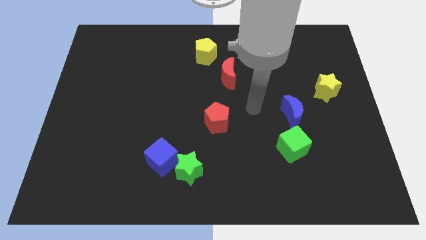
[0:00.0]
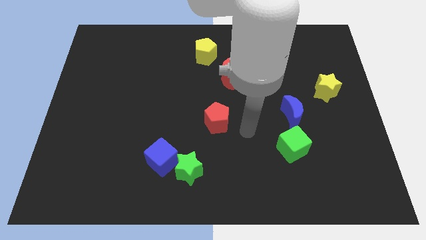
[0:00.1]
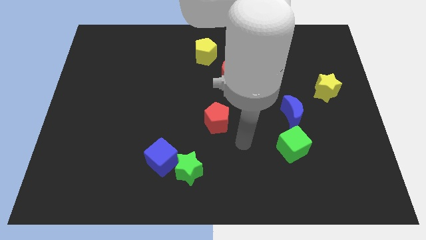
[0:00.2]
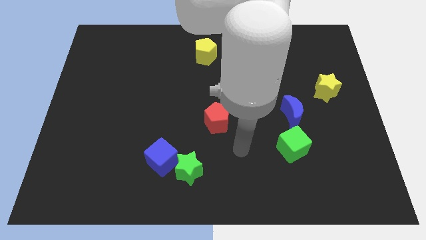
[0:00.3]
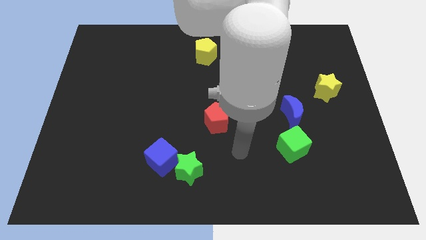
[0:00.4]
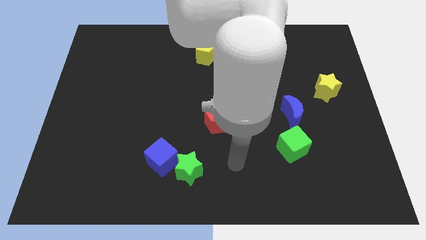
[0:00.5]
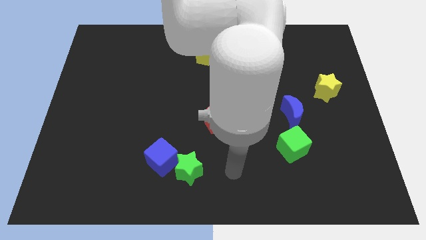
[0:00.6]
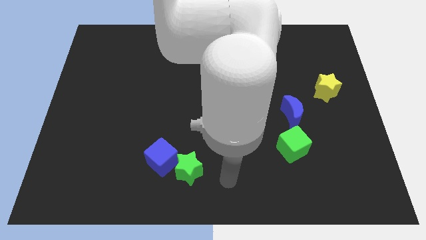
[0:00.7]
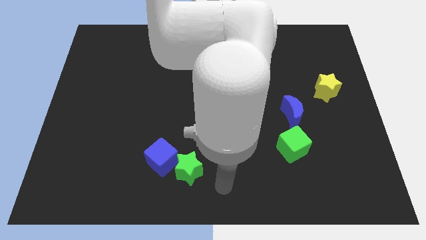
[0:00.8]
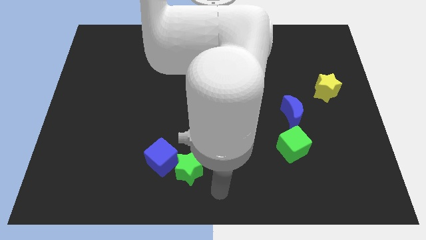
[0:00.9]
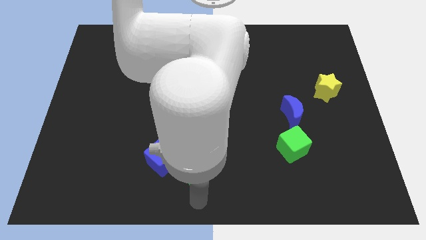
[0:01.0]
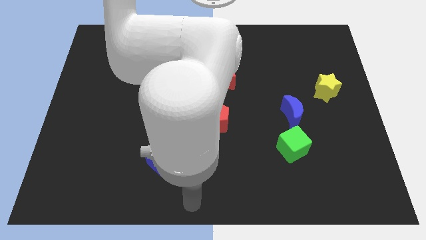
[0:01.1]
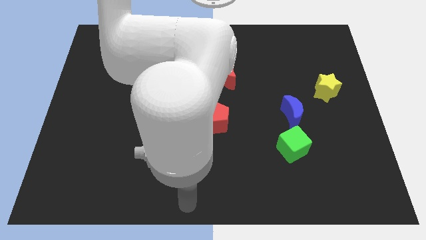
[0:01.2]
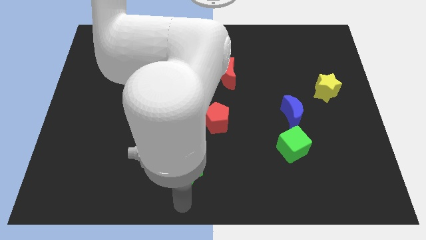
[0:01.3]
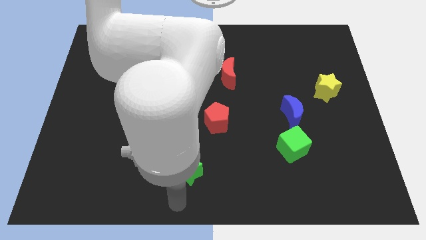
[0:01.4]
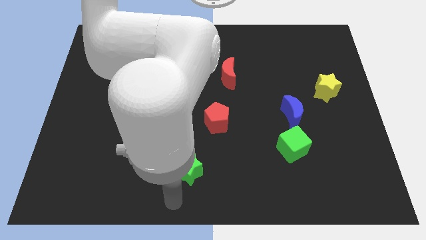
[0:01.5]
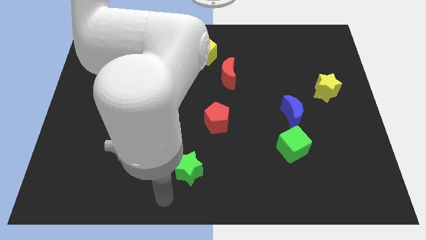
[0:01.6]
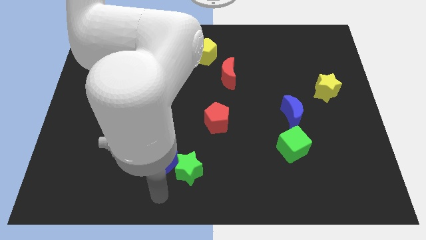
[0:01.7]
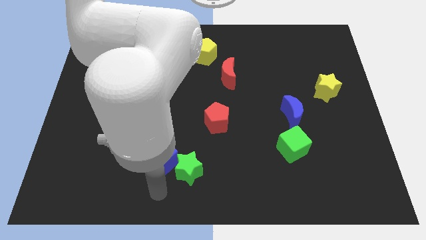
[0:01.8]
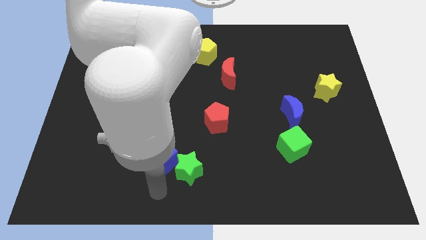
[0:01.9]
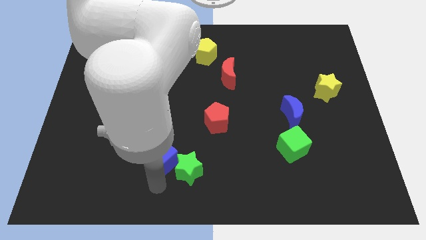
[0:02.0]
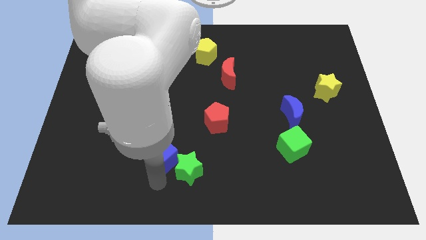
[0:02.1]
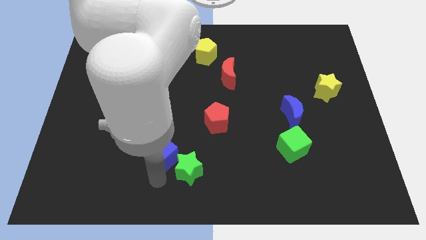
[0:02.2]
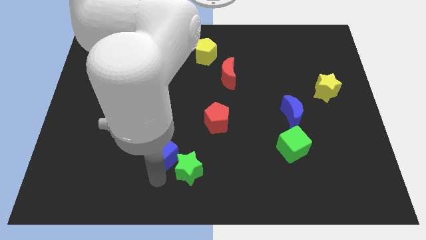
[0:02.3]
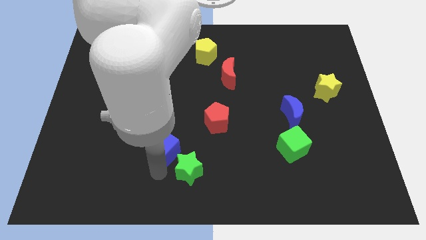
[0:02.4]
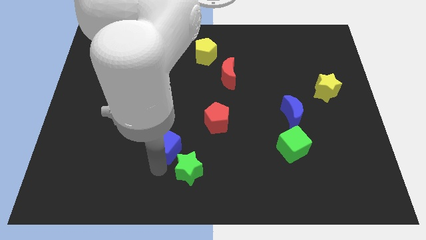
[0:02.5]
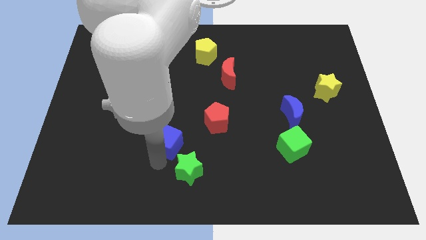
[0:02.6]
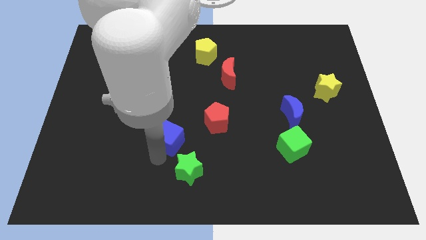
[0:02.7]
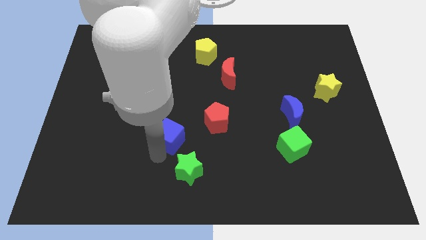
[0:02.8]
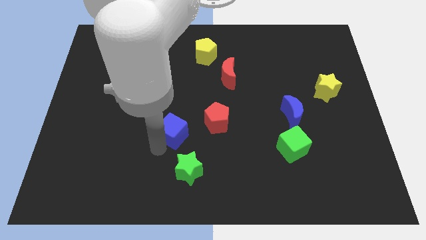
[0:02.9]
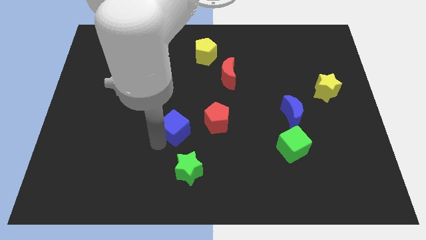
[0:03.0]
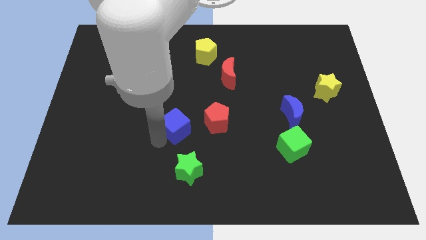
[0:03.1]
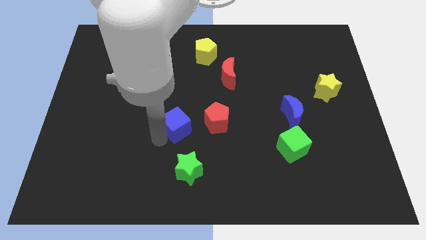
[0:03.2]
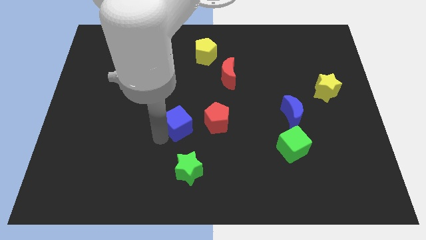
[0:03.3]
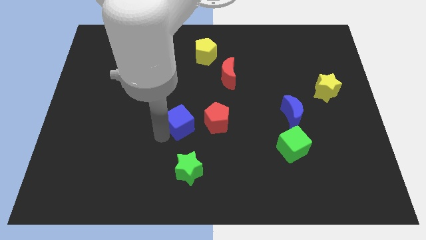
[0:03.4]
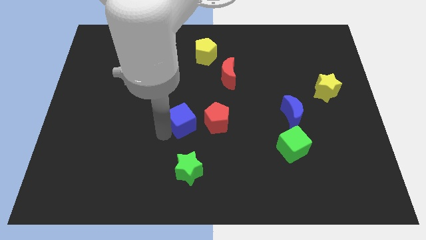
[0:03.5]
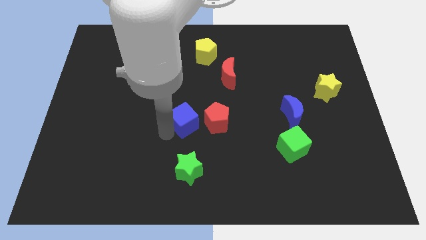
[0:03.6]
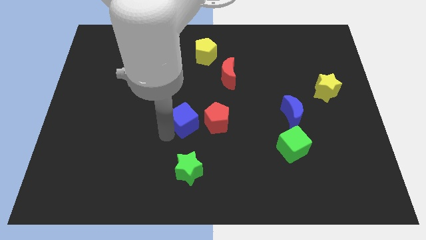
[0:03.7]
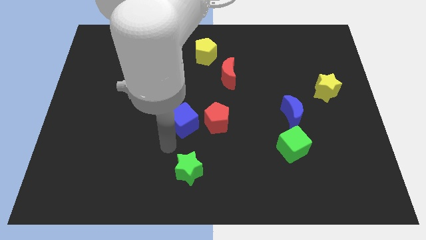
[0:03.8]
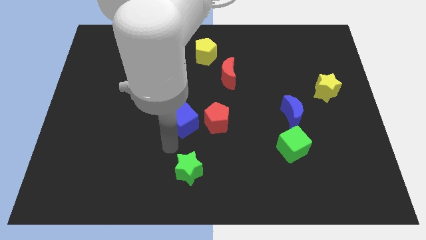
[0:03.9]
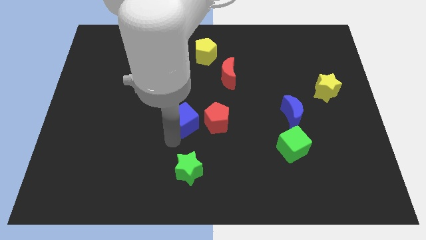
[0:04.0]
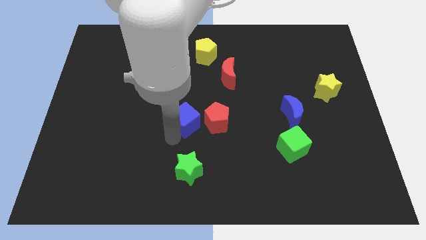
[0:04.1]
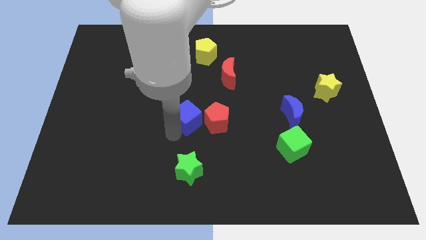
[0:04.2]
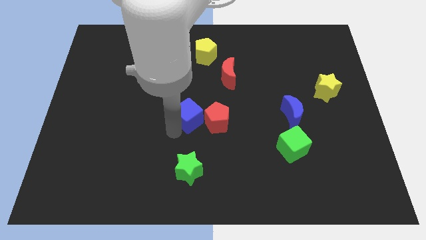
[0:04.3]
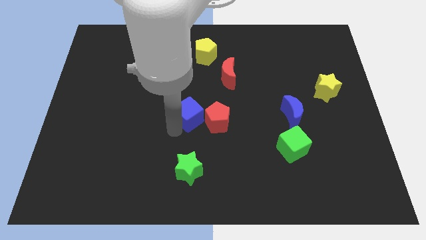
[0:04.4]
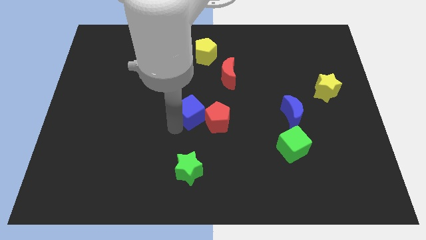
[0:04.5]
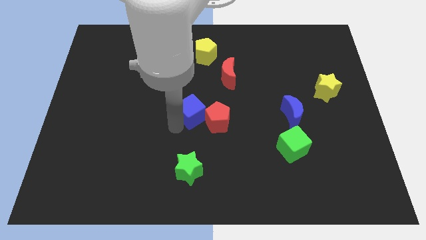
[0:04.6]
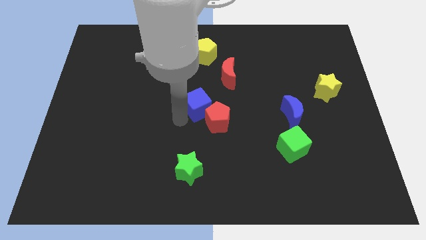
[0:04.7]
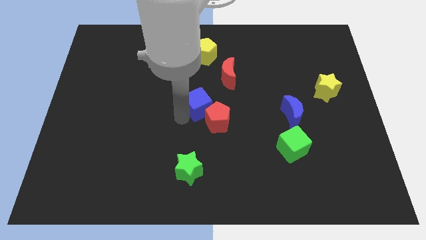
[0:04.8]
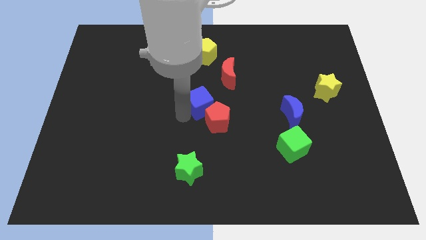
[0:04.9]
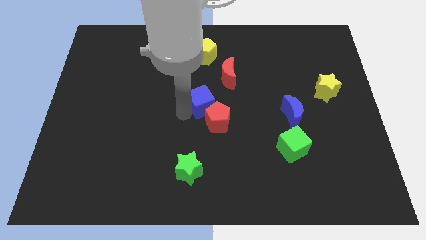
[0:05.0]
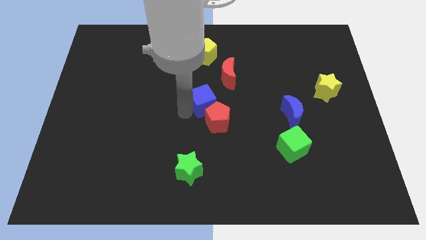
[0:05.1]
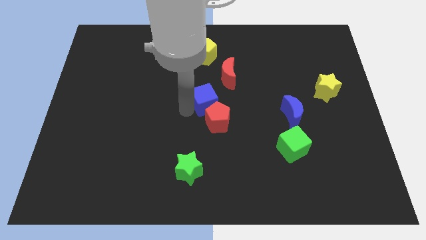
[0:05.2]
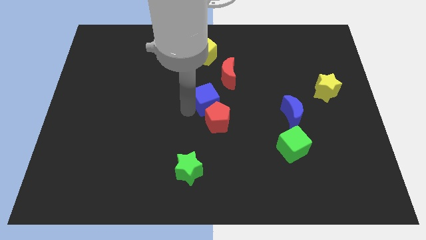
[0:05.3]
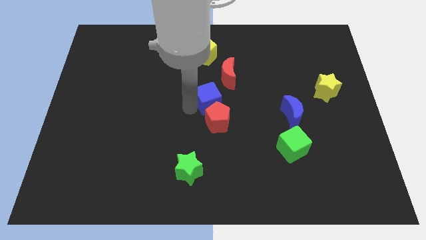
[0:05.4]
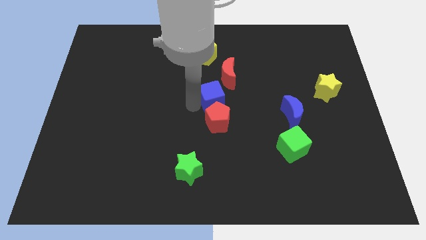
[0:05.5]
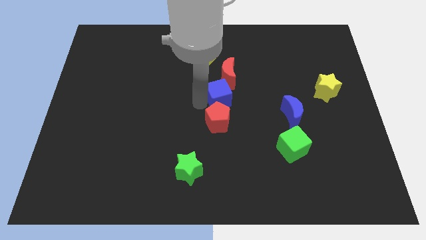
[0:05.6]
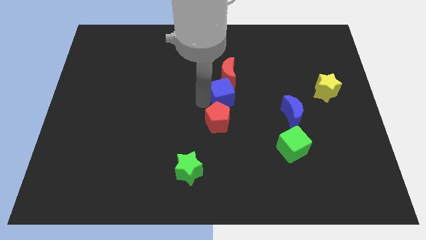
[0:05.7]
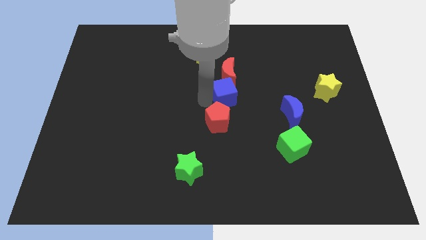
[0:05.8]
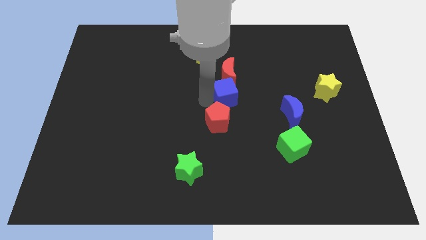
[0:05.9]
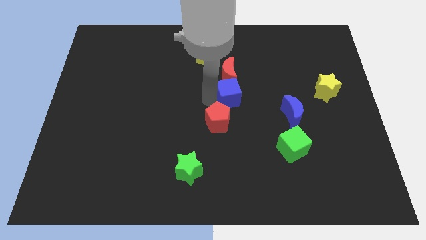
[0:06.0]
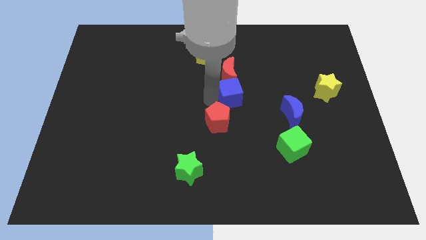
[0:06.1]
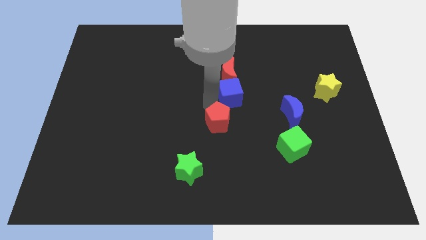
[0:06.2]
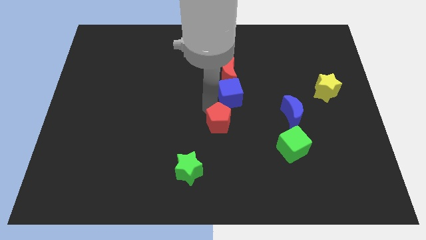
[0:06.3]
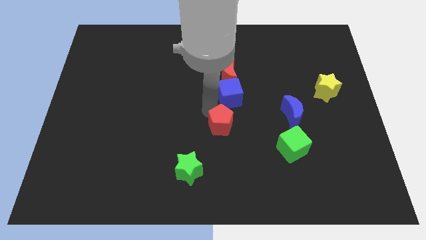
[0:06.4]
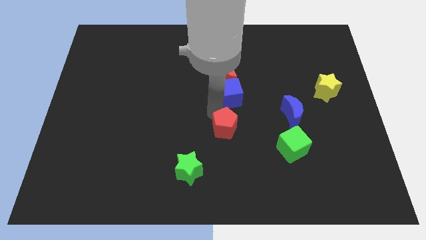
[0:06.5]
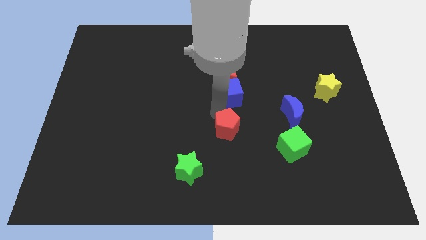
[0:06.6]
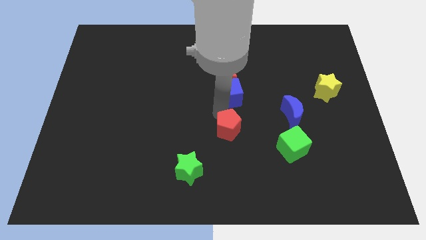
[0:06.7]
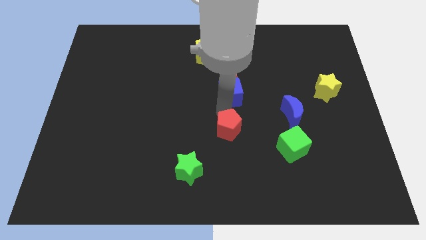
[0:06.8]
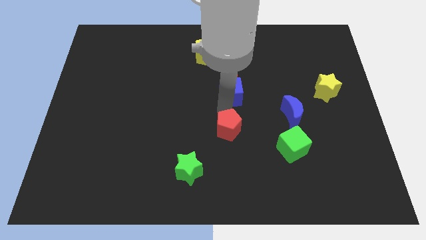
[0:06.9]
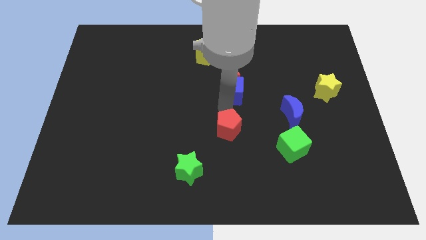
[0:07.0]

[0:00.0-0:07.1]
slide the blue cube close to the red moon

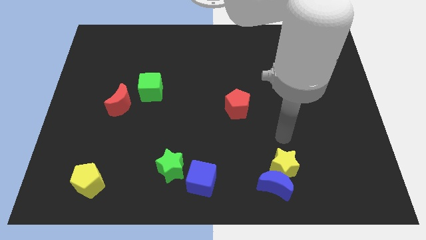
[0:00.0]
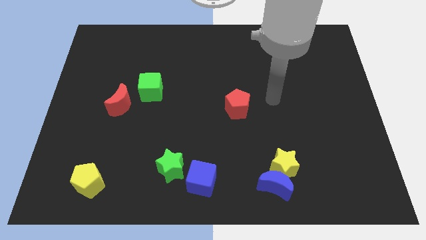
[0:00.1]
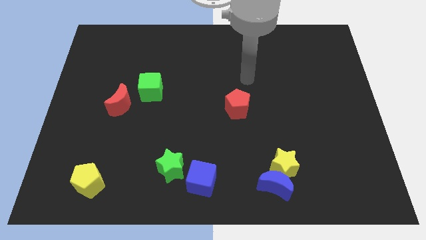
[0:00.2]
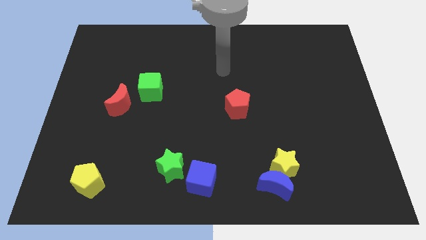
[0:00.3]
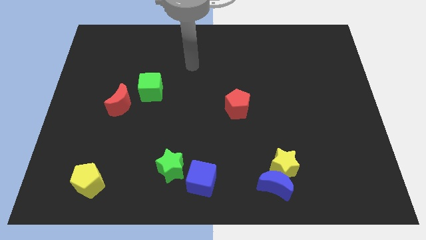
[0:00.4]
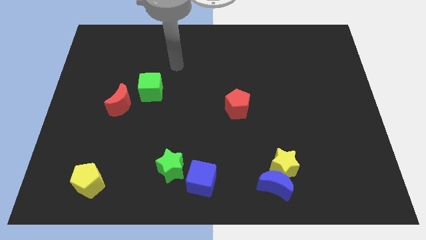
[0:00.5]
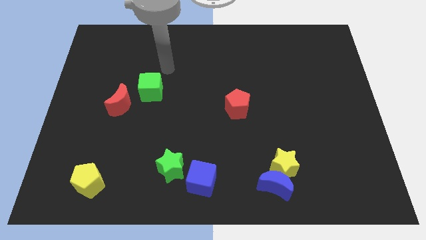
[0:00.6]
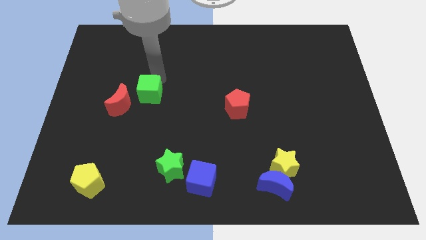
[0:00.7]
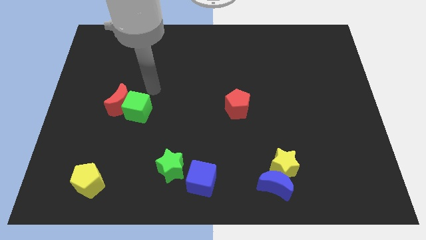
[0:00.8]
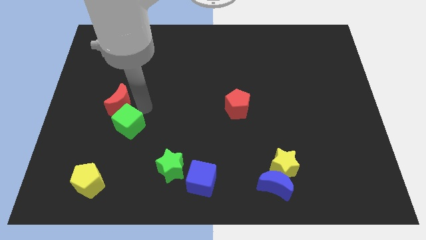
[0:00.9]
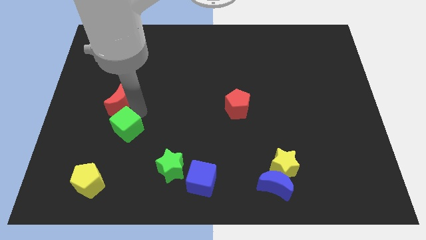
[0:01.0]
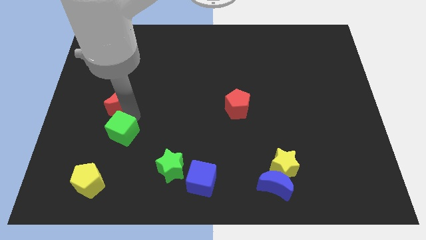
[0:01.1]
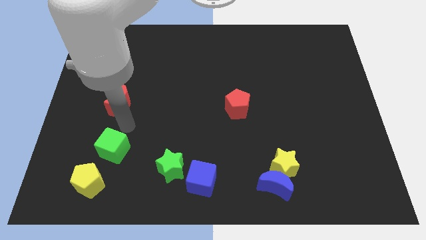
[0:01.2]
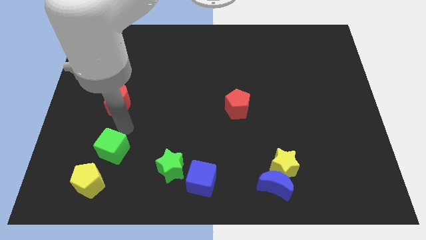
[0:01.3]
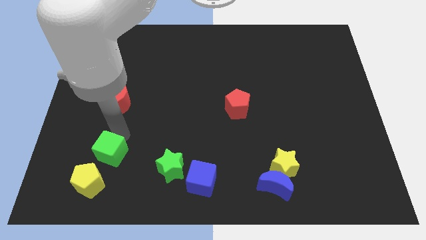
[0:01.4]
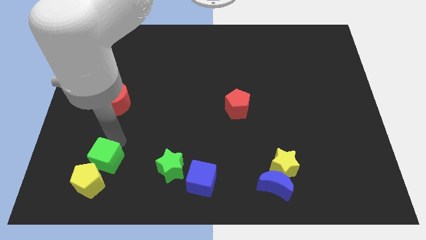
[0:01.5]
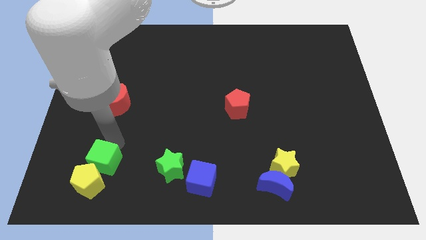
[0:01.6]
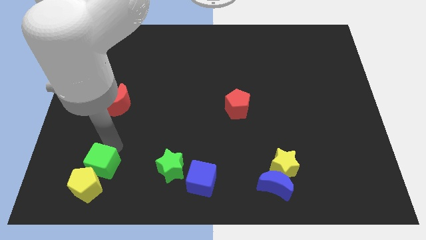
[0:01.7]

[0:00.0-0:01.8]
move the green cube to the yellow pentagon
